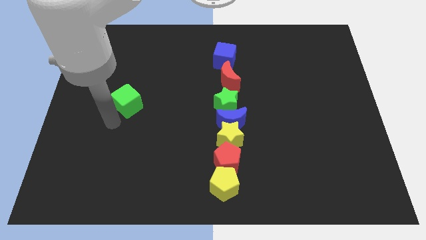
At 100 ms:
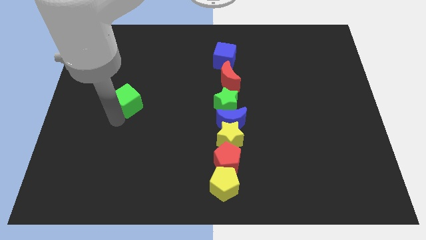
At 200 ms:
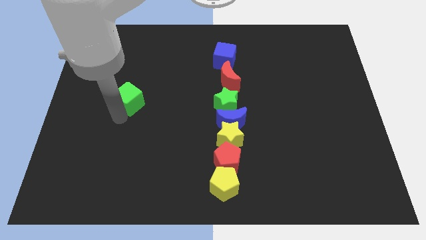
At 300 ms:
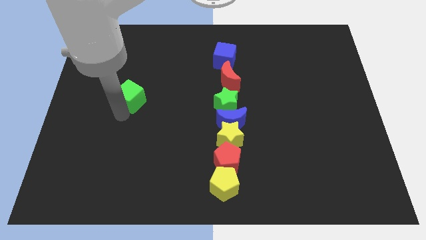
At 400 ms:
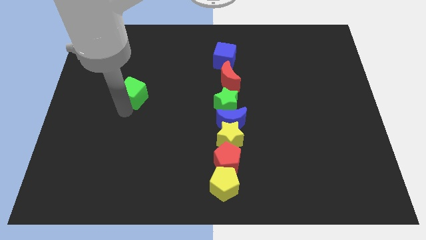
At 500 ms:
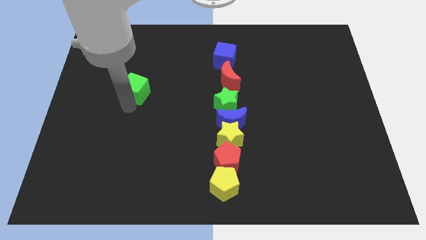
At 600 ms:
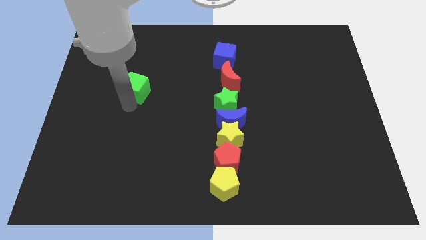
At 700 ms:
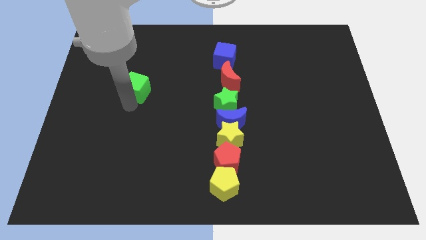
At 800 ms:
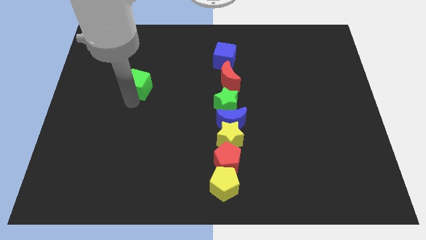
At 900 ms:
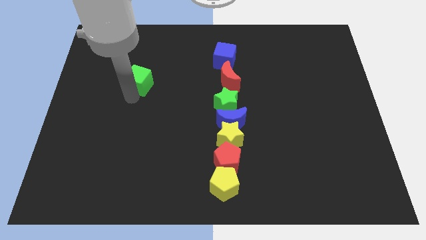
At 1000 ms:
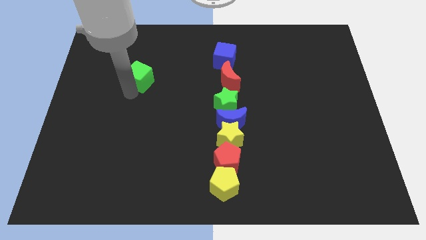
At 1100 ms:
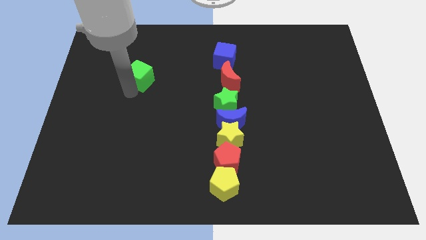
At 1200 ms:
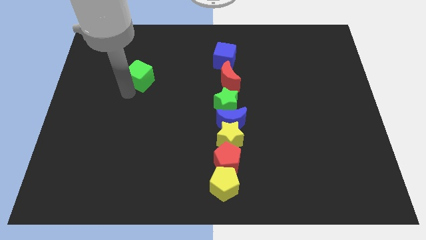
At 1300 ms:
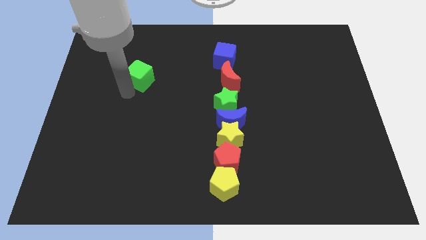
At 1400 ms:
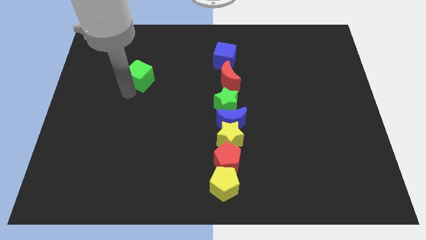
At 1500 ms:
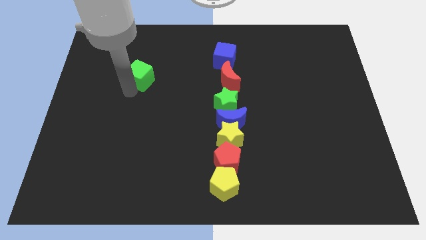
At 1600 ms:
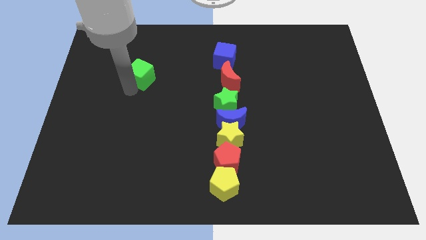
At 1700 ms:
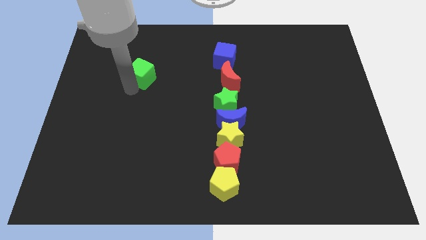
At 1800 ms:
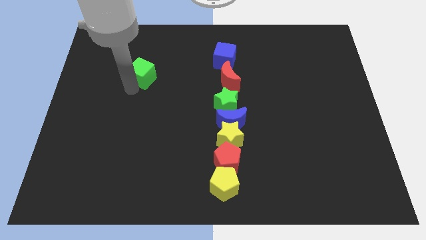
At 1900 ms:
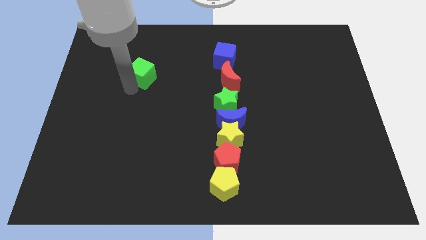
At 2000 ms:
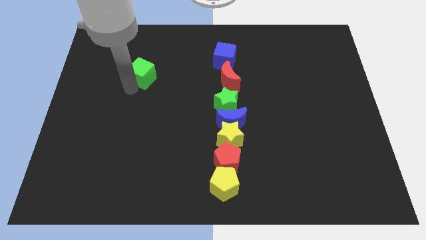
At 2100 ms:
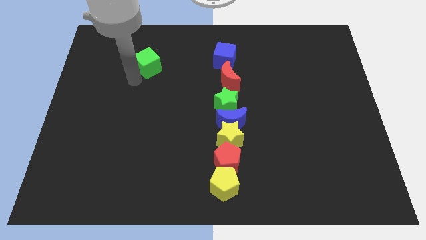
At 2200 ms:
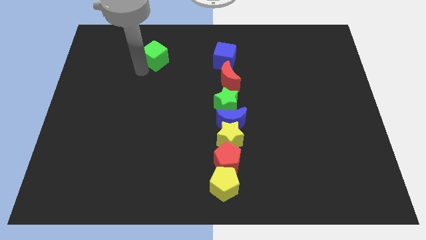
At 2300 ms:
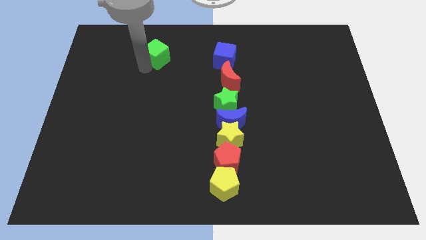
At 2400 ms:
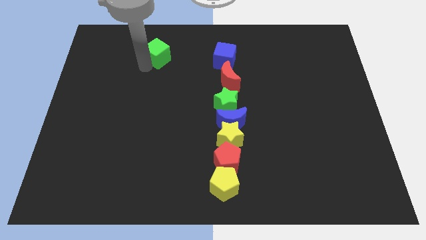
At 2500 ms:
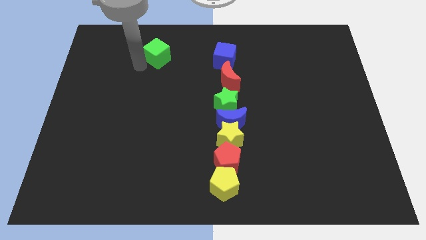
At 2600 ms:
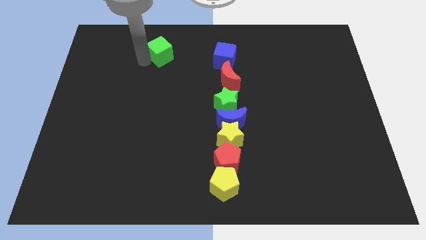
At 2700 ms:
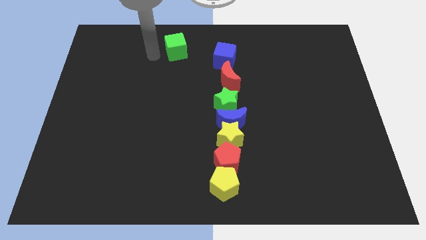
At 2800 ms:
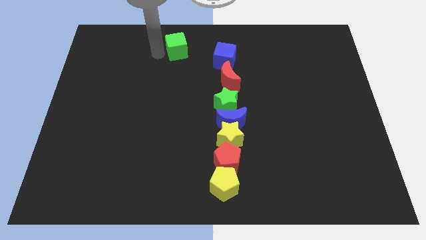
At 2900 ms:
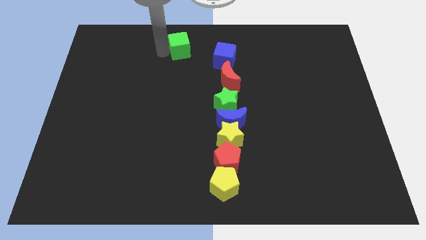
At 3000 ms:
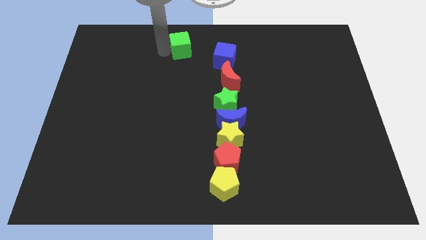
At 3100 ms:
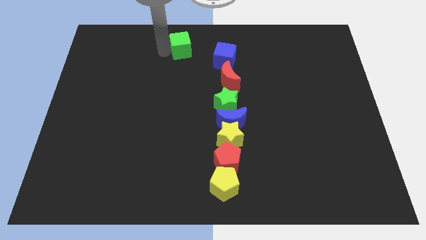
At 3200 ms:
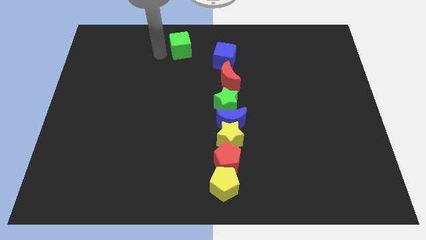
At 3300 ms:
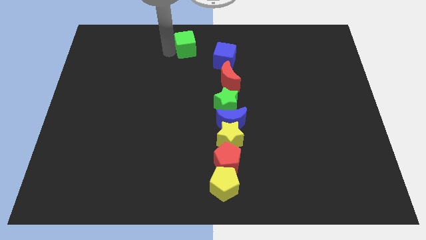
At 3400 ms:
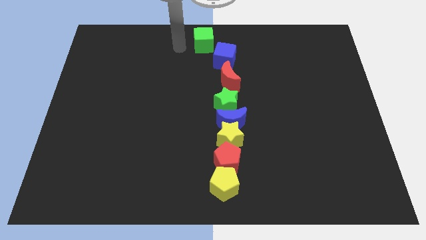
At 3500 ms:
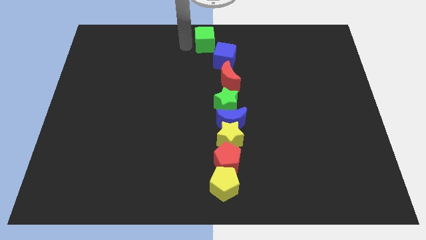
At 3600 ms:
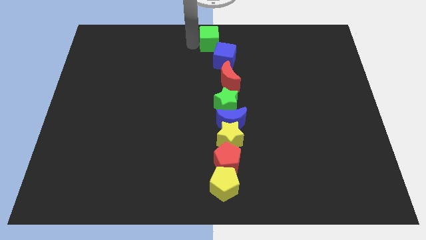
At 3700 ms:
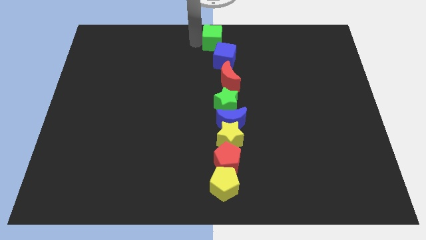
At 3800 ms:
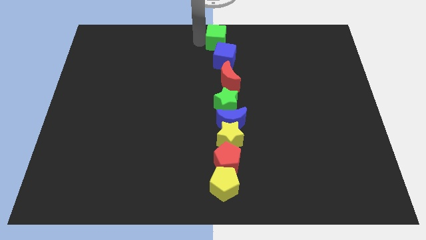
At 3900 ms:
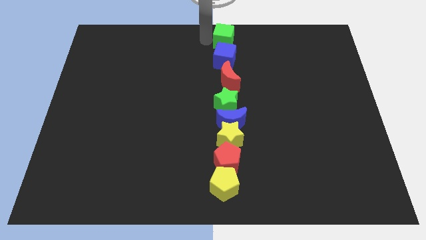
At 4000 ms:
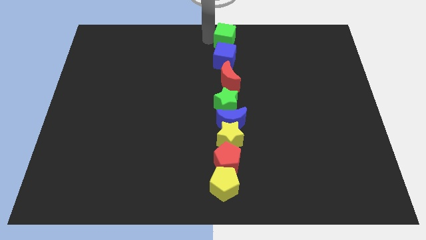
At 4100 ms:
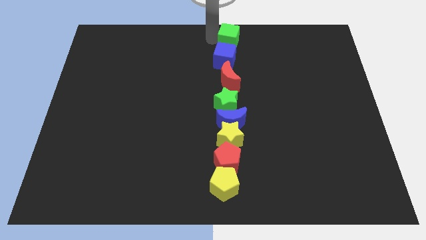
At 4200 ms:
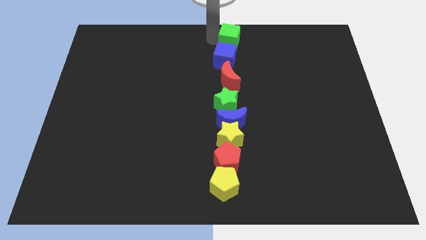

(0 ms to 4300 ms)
place the green cube at the top center of the board

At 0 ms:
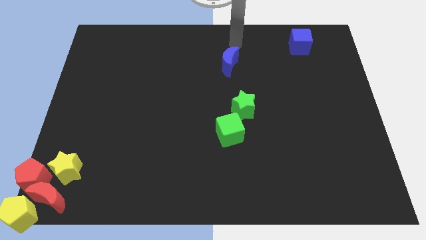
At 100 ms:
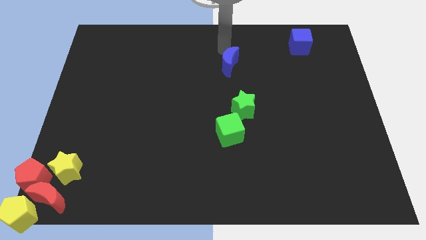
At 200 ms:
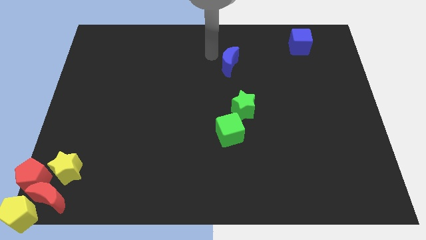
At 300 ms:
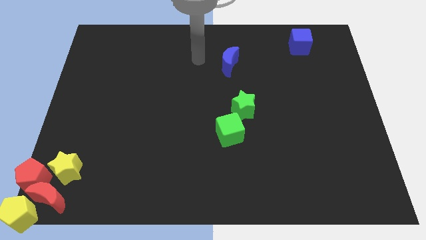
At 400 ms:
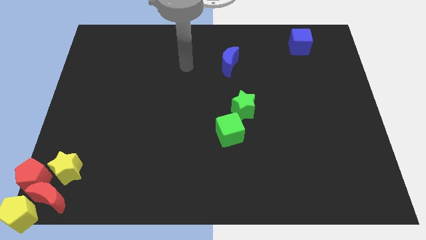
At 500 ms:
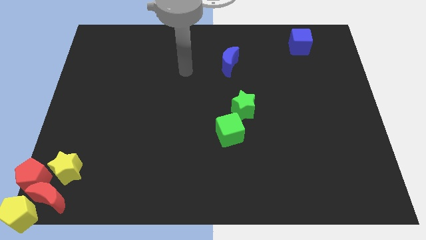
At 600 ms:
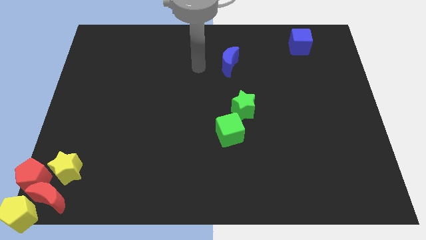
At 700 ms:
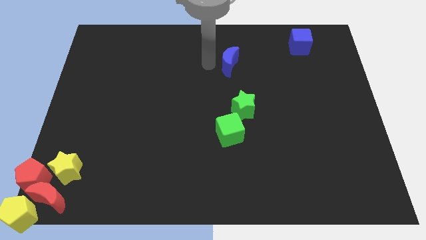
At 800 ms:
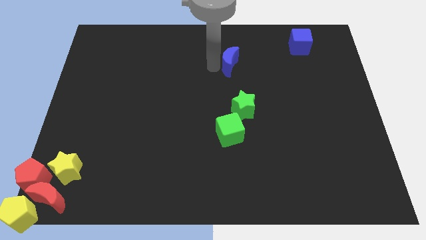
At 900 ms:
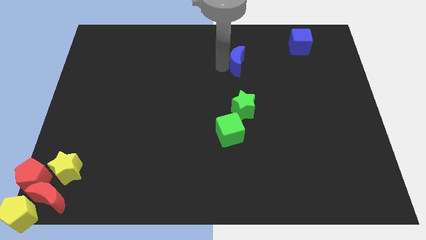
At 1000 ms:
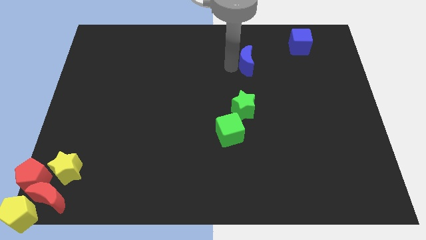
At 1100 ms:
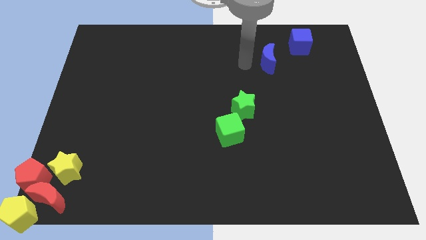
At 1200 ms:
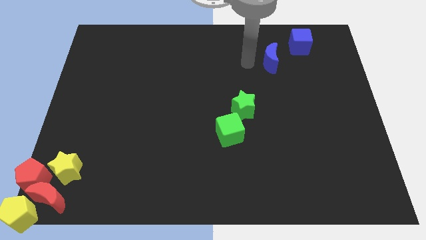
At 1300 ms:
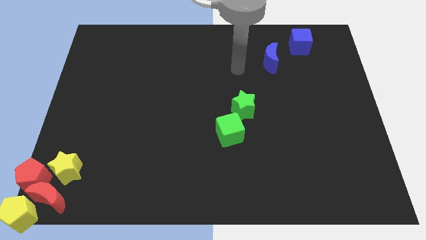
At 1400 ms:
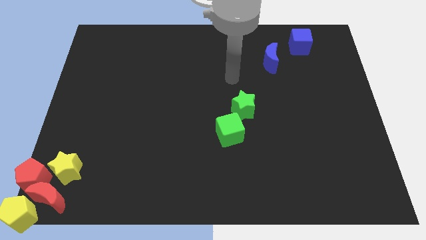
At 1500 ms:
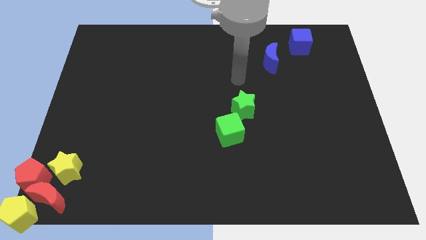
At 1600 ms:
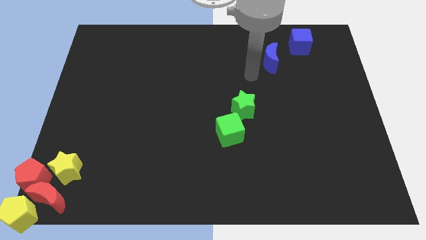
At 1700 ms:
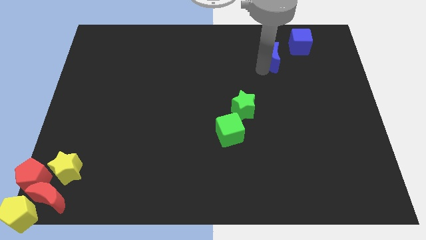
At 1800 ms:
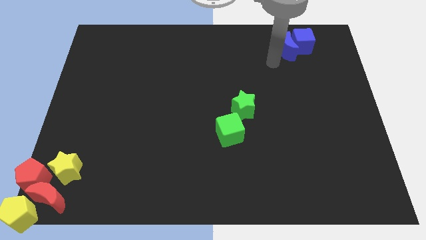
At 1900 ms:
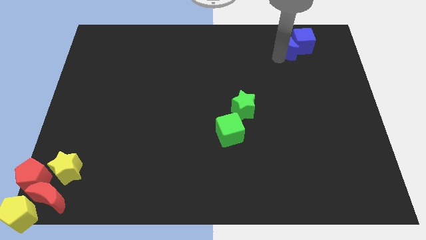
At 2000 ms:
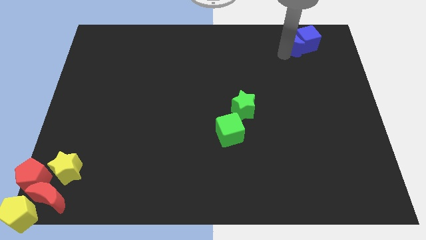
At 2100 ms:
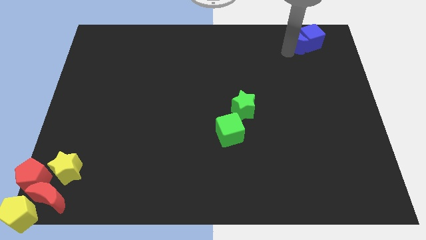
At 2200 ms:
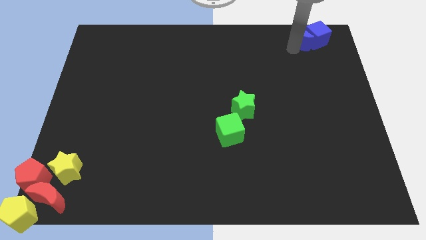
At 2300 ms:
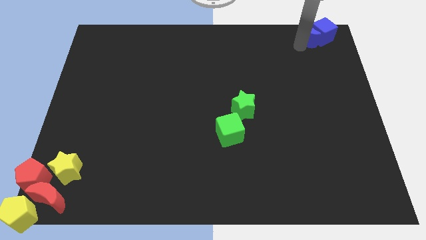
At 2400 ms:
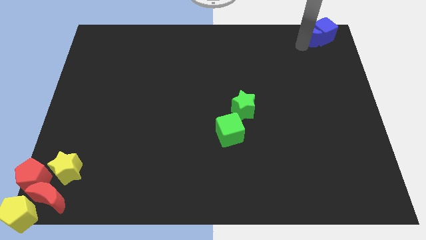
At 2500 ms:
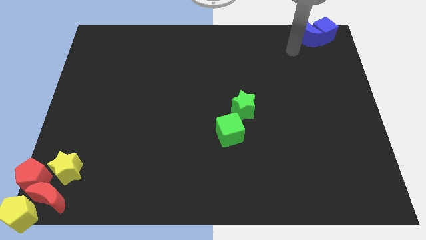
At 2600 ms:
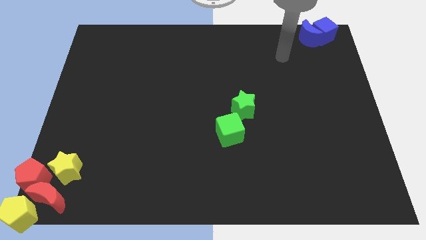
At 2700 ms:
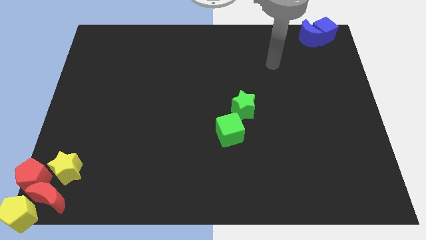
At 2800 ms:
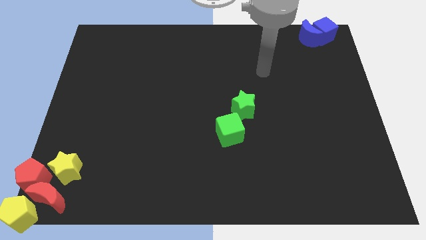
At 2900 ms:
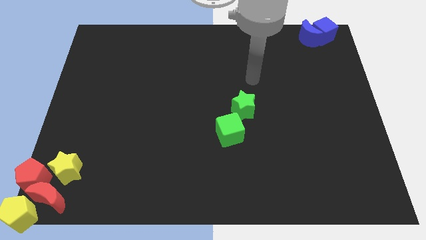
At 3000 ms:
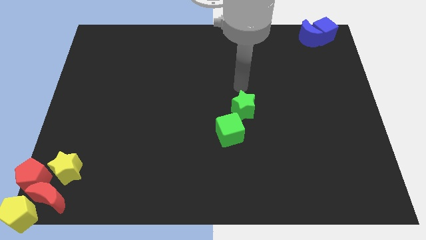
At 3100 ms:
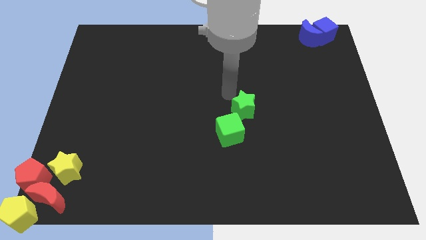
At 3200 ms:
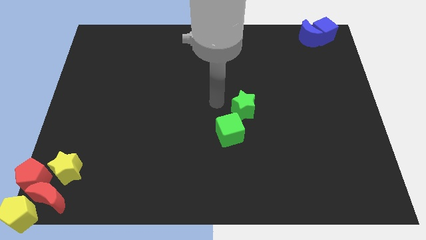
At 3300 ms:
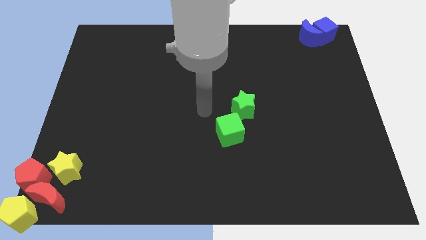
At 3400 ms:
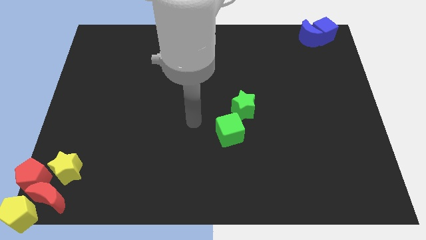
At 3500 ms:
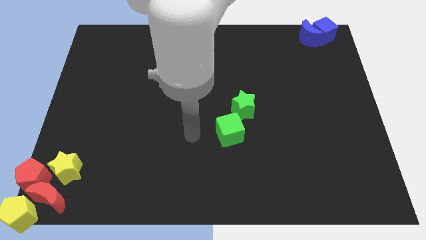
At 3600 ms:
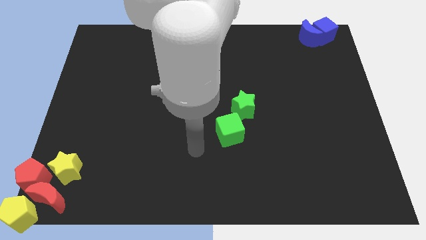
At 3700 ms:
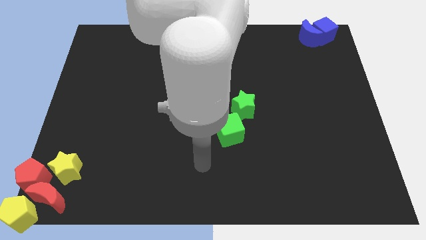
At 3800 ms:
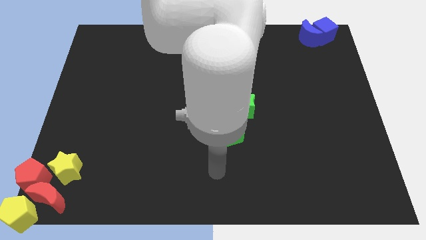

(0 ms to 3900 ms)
push the blue moon and blue cube to the top right corner together

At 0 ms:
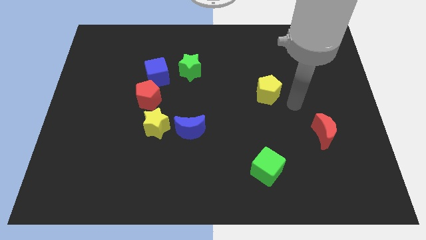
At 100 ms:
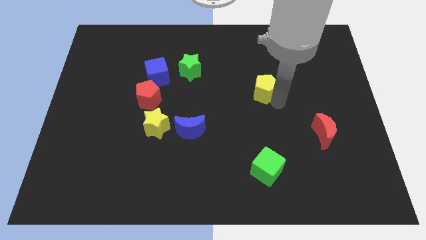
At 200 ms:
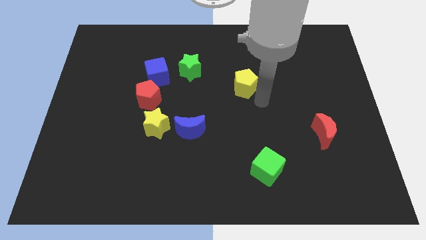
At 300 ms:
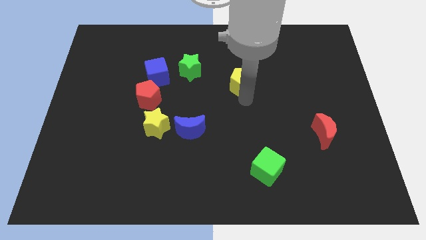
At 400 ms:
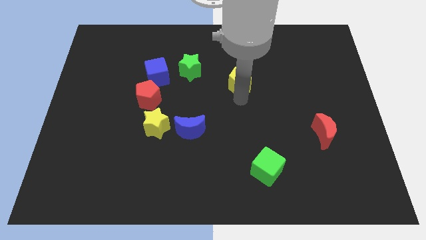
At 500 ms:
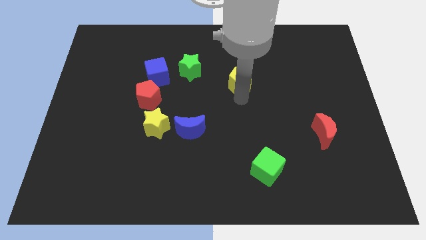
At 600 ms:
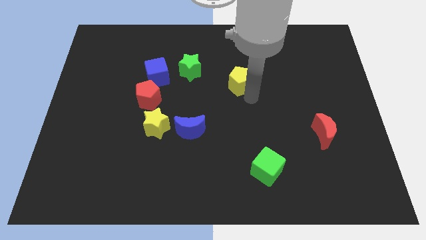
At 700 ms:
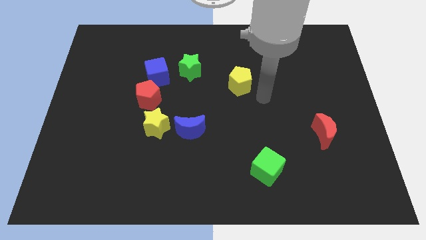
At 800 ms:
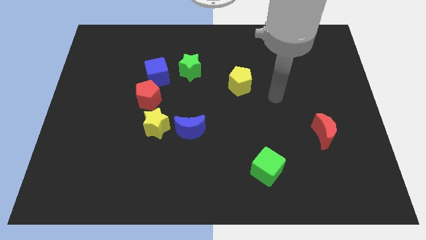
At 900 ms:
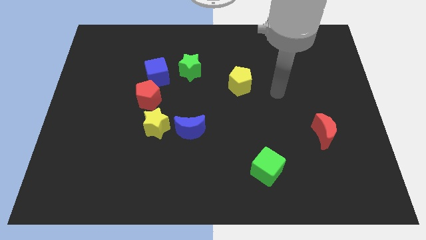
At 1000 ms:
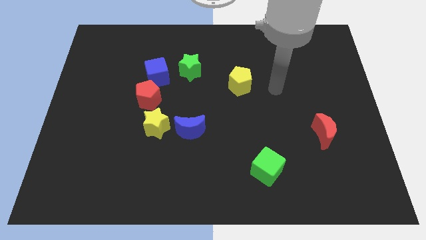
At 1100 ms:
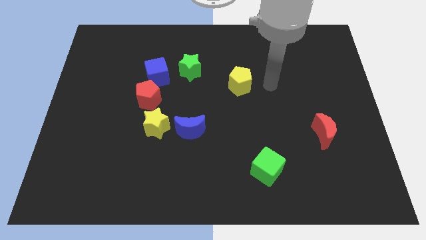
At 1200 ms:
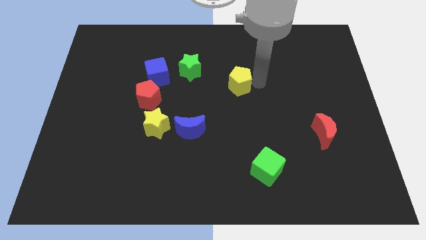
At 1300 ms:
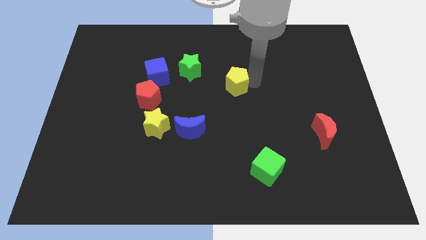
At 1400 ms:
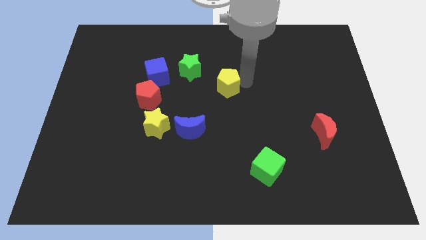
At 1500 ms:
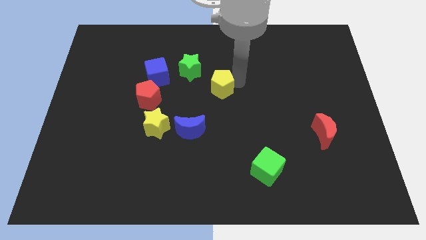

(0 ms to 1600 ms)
move the yellow pentagon diagonally on the bottom right side of the green star
